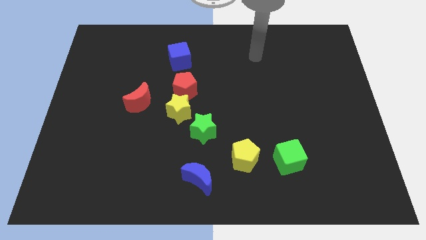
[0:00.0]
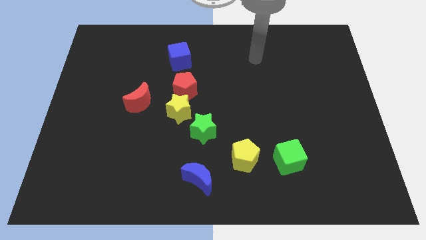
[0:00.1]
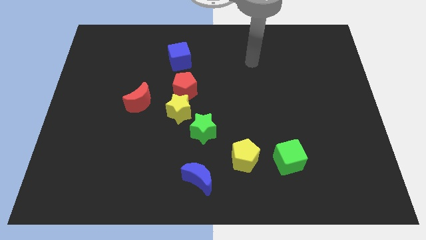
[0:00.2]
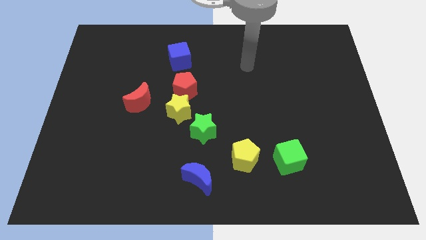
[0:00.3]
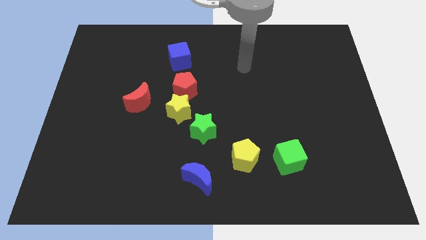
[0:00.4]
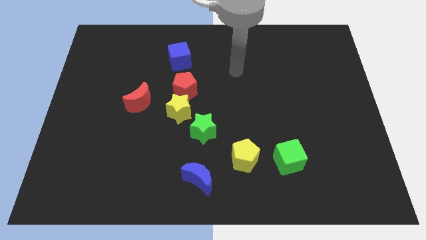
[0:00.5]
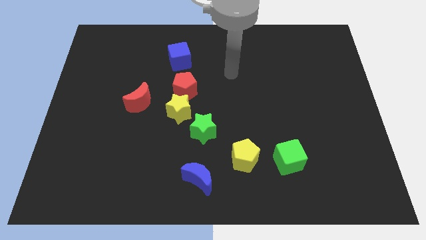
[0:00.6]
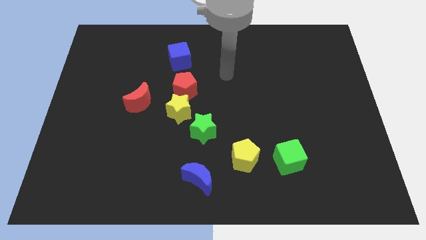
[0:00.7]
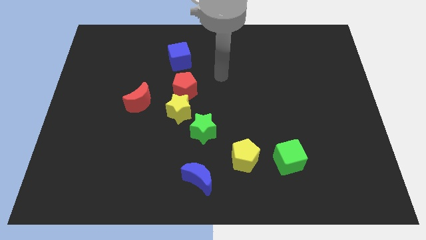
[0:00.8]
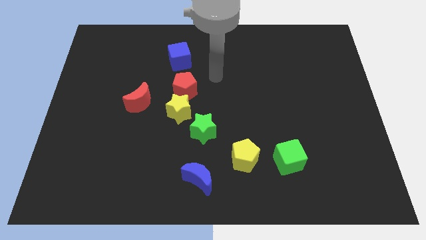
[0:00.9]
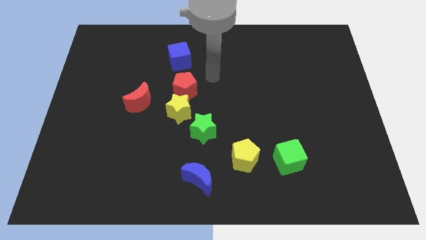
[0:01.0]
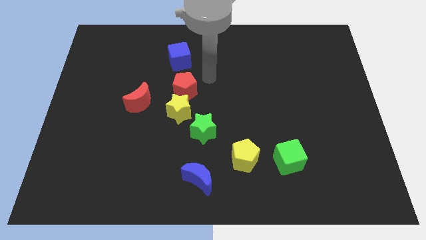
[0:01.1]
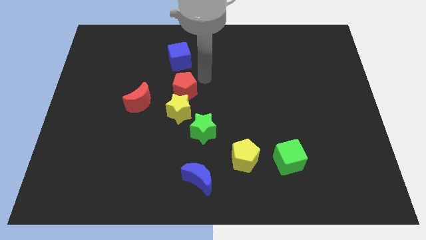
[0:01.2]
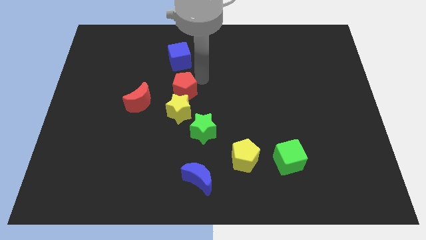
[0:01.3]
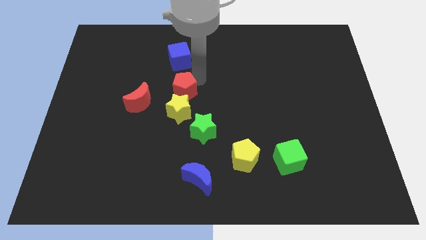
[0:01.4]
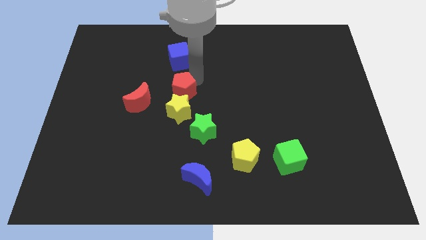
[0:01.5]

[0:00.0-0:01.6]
touch the right side of the red pentagon

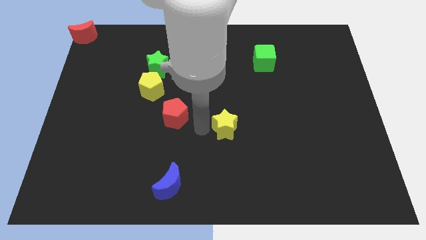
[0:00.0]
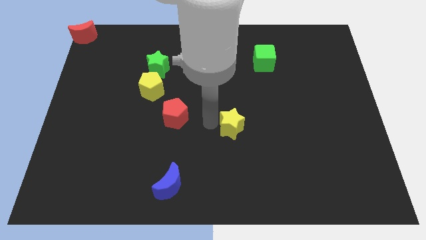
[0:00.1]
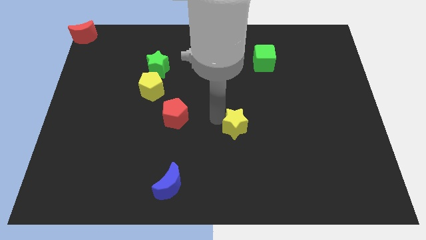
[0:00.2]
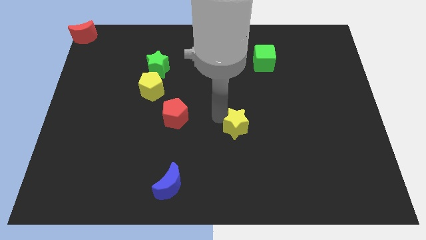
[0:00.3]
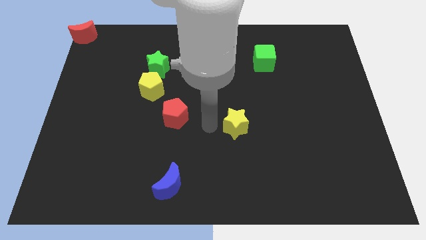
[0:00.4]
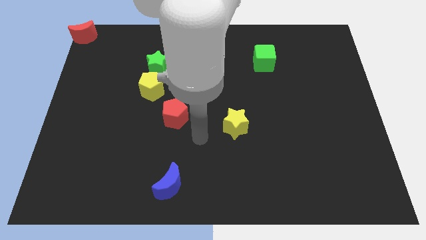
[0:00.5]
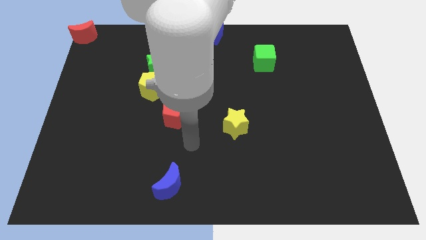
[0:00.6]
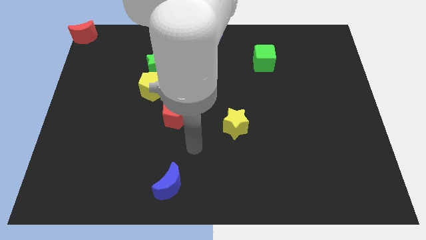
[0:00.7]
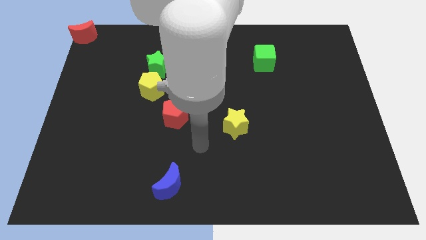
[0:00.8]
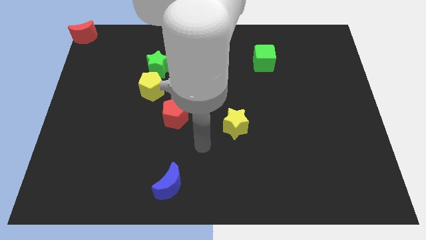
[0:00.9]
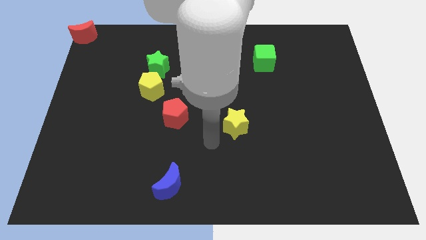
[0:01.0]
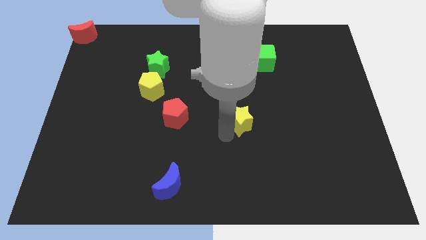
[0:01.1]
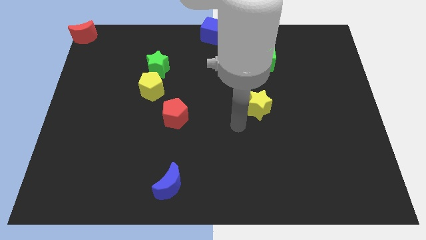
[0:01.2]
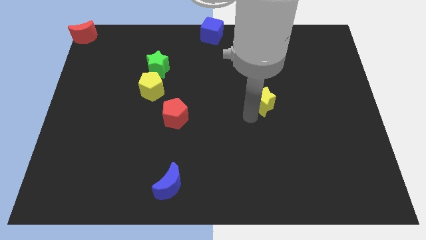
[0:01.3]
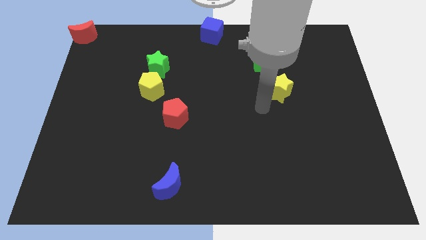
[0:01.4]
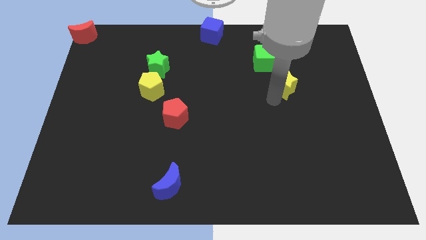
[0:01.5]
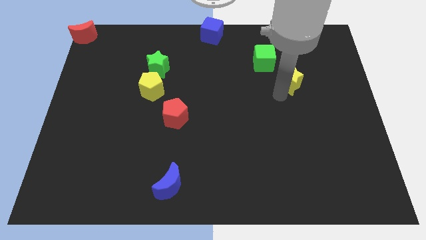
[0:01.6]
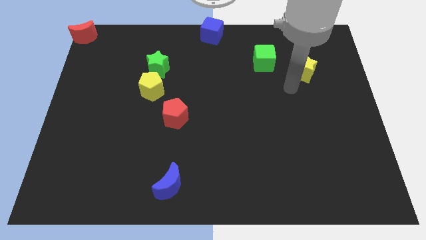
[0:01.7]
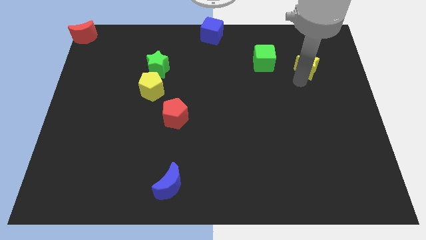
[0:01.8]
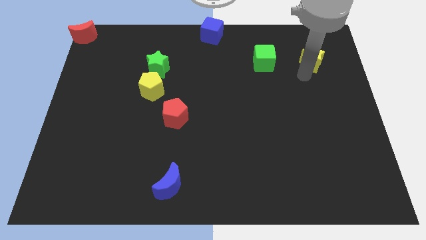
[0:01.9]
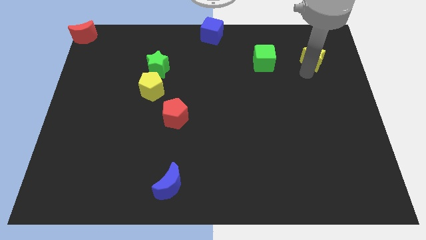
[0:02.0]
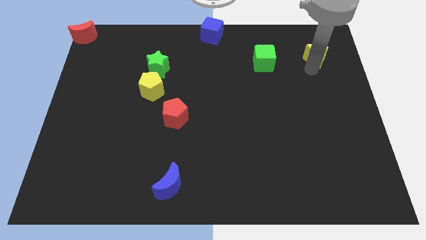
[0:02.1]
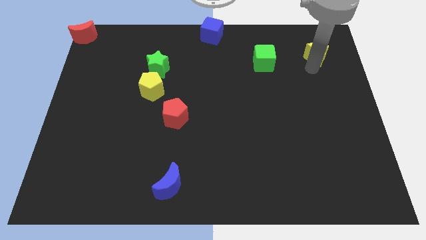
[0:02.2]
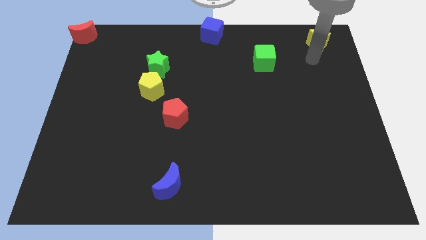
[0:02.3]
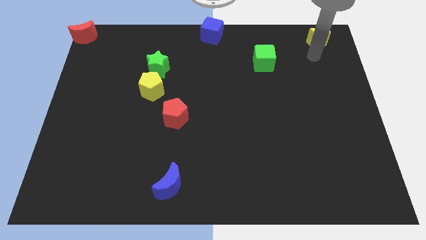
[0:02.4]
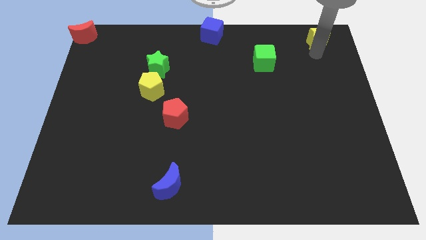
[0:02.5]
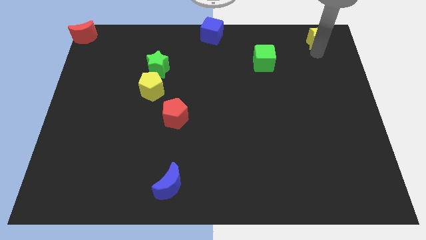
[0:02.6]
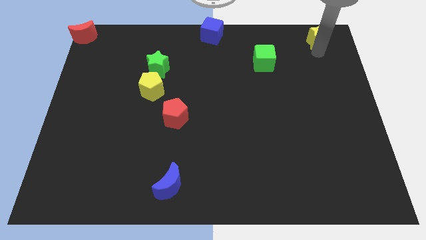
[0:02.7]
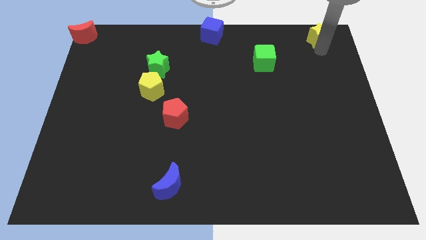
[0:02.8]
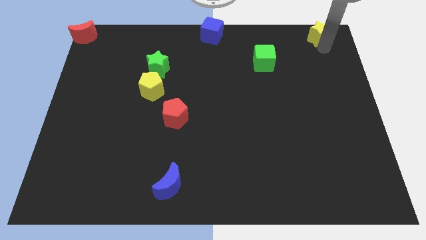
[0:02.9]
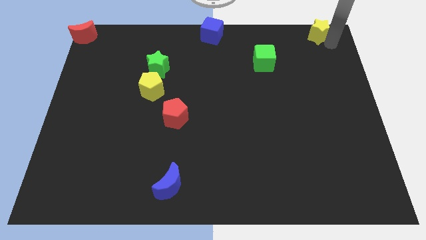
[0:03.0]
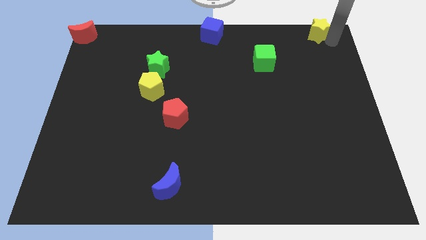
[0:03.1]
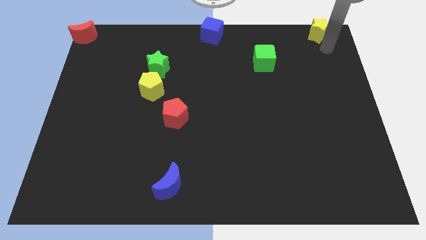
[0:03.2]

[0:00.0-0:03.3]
push the yellow star to the top right corner

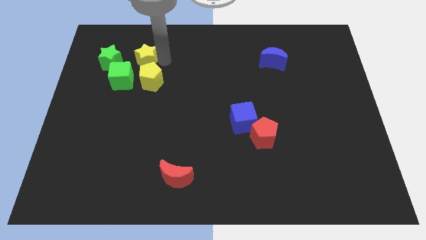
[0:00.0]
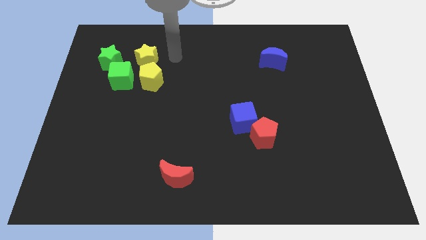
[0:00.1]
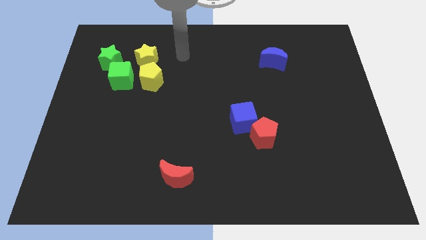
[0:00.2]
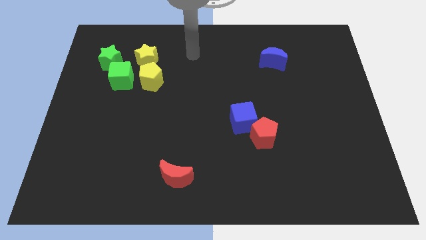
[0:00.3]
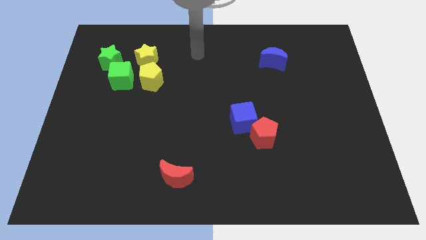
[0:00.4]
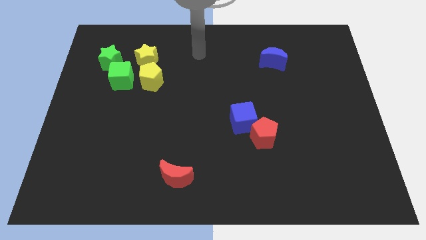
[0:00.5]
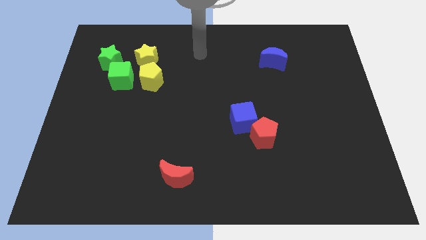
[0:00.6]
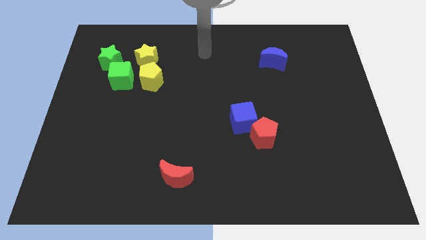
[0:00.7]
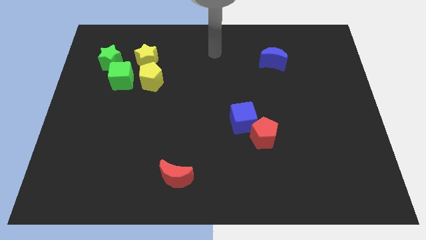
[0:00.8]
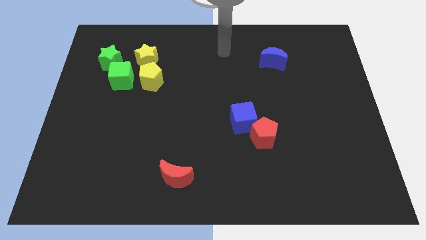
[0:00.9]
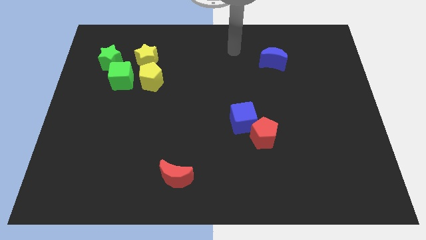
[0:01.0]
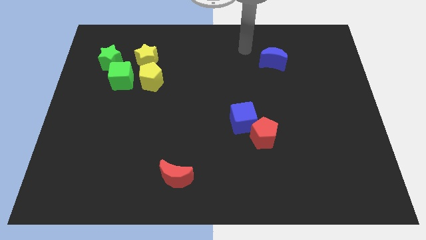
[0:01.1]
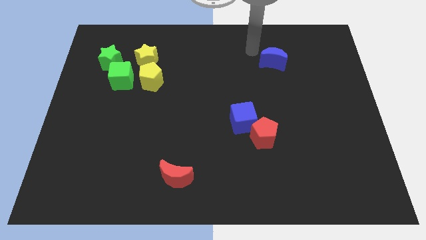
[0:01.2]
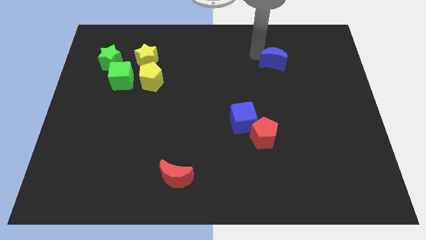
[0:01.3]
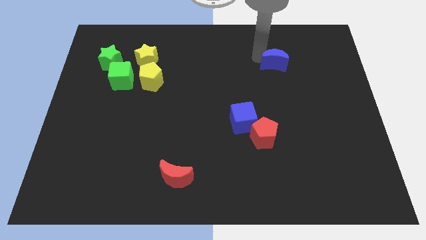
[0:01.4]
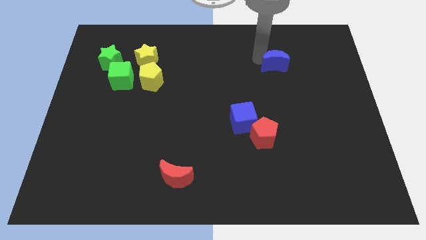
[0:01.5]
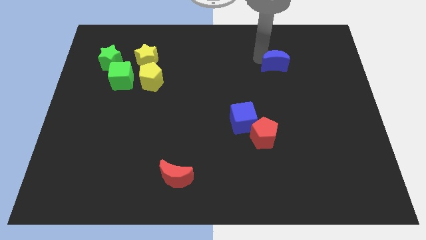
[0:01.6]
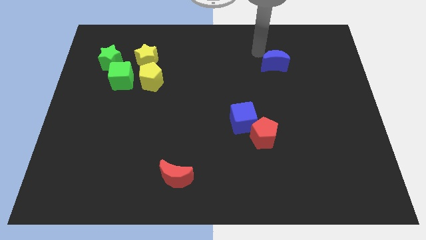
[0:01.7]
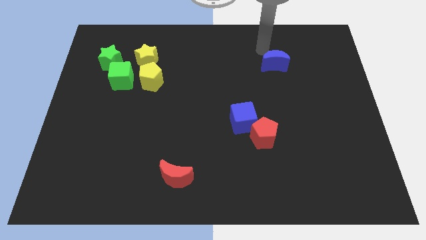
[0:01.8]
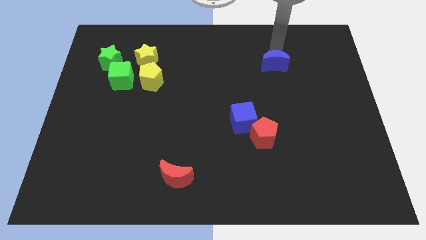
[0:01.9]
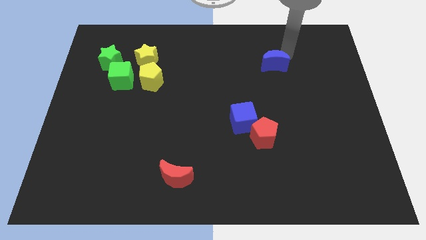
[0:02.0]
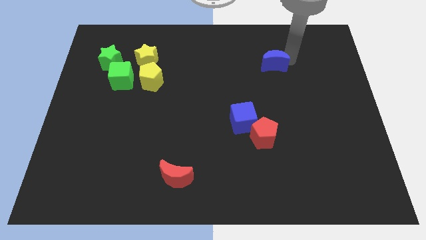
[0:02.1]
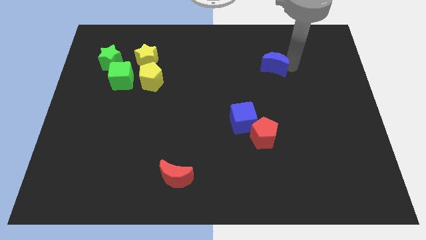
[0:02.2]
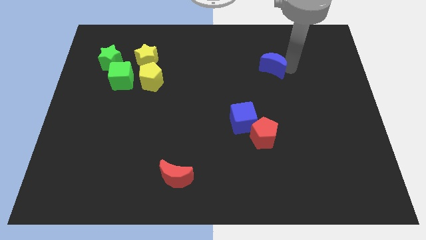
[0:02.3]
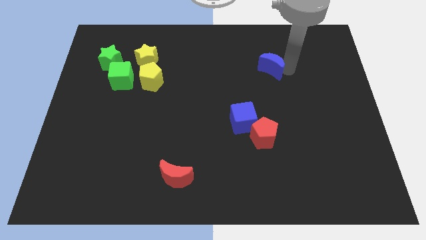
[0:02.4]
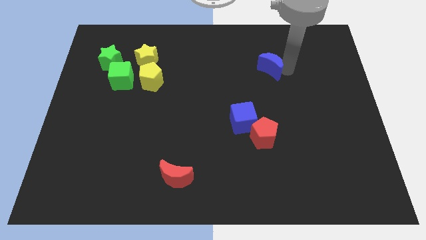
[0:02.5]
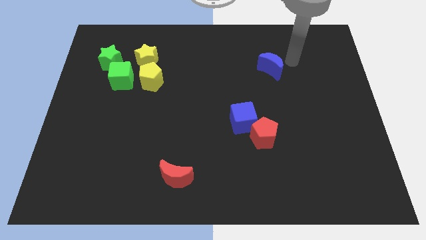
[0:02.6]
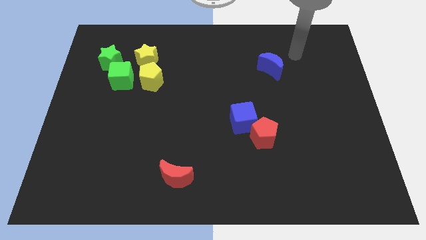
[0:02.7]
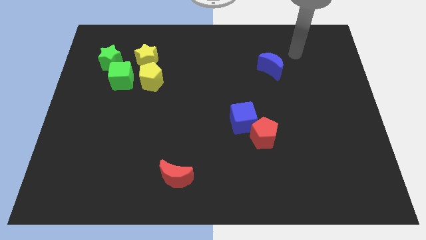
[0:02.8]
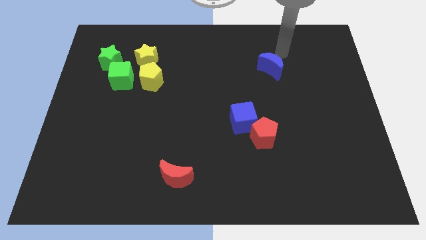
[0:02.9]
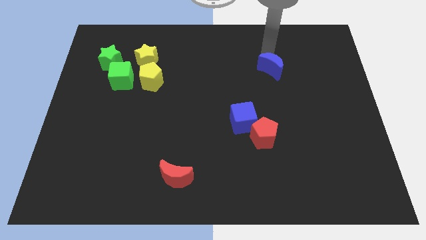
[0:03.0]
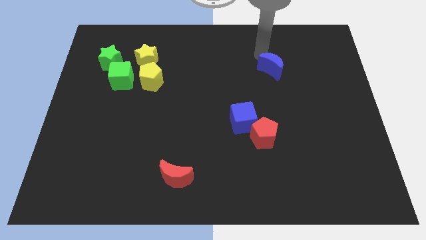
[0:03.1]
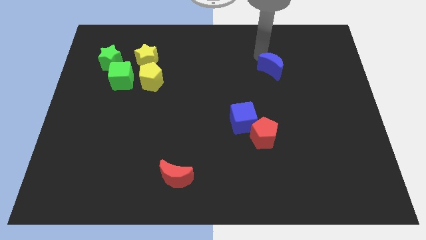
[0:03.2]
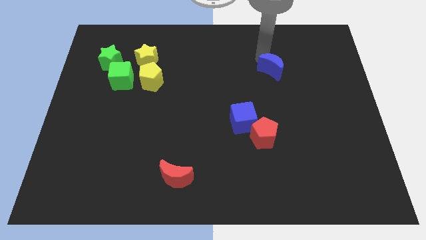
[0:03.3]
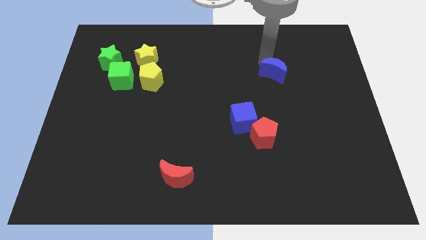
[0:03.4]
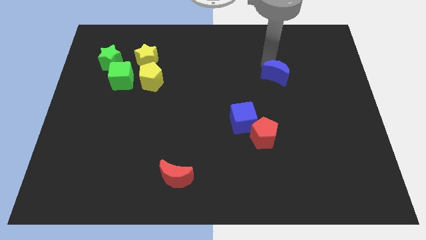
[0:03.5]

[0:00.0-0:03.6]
move blue moon to the center of the board

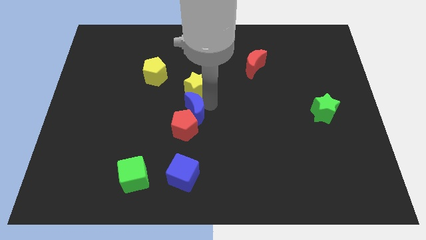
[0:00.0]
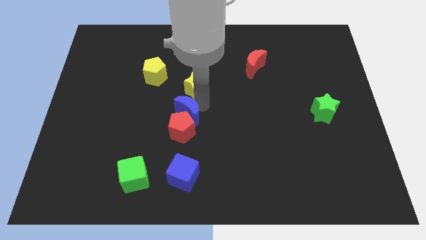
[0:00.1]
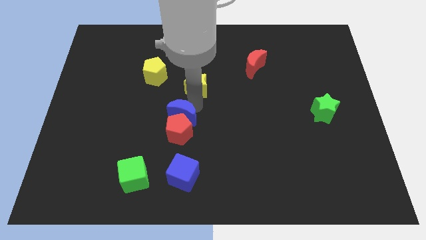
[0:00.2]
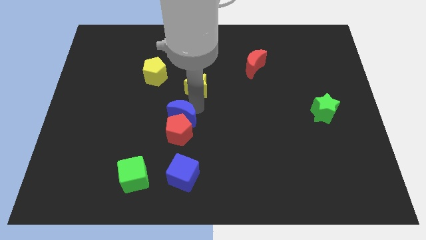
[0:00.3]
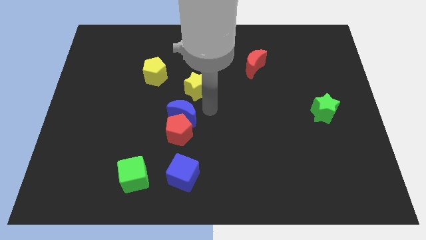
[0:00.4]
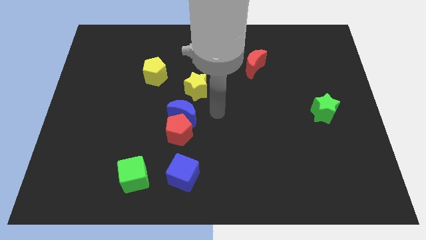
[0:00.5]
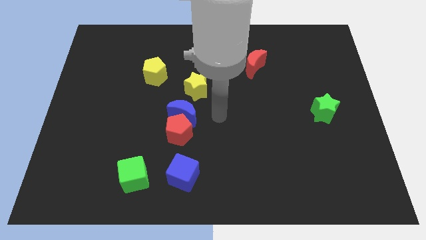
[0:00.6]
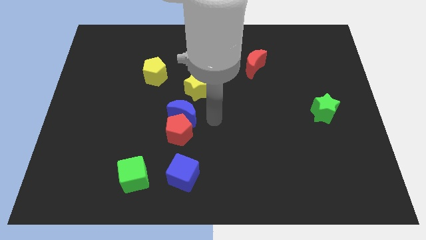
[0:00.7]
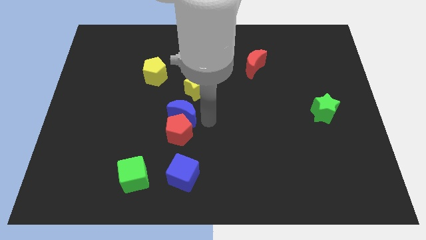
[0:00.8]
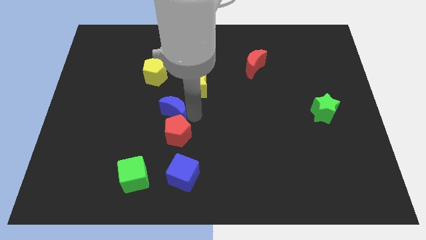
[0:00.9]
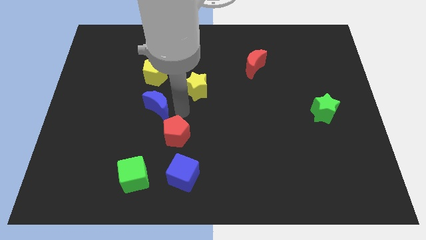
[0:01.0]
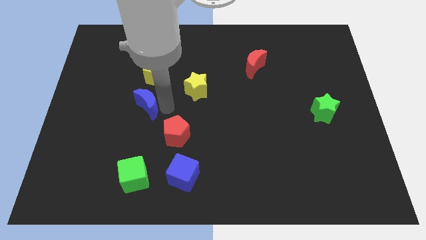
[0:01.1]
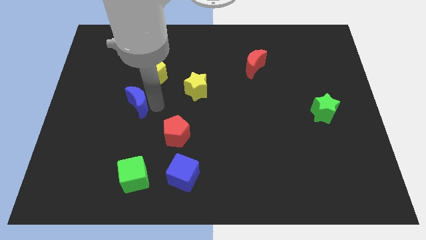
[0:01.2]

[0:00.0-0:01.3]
separate blue moon from red pentagon
